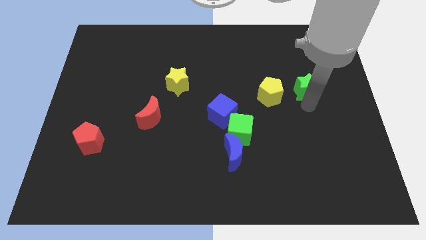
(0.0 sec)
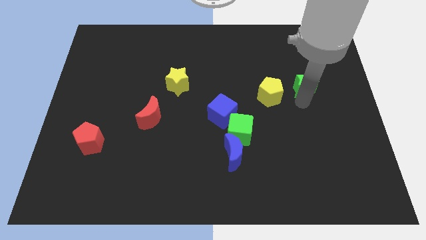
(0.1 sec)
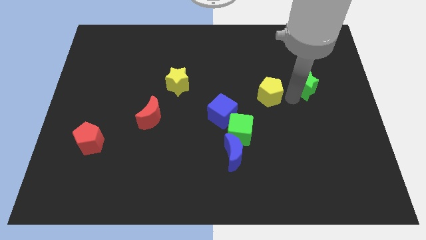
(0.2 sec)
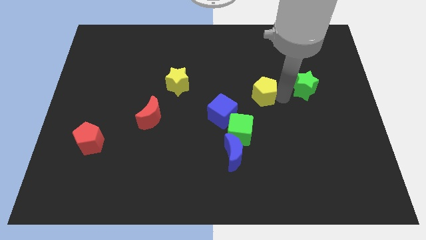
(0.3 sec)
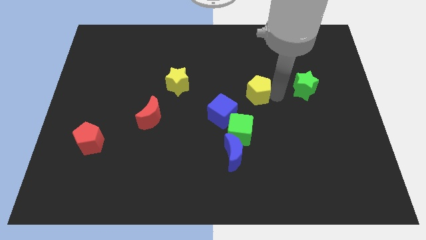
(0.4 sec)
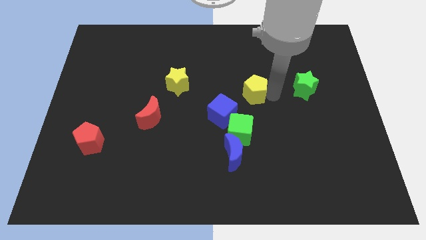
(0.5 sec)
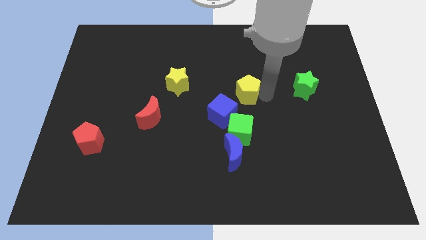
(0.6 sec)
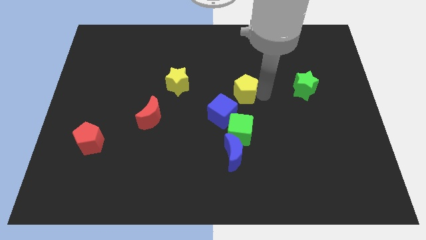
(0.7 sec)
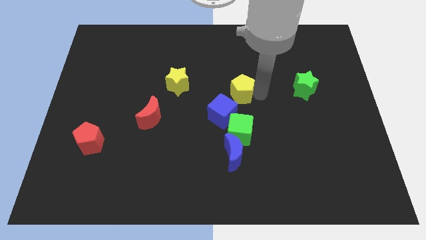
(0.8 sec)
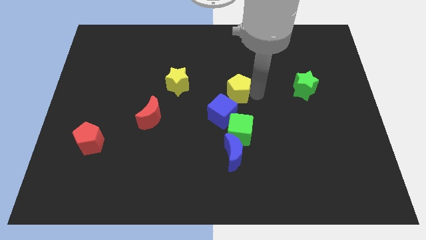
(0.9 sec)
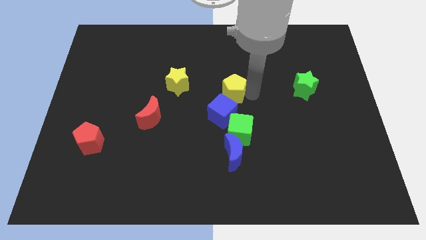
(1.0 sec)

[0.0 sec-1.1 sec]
move the yellow pentagon close to the blue cube

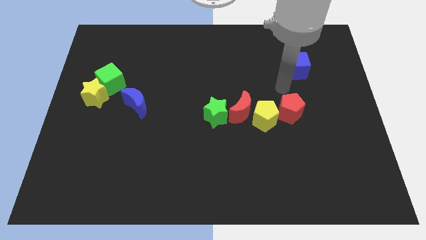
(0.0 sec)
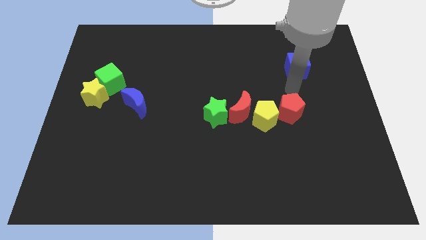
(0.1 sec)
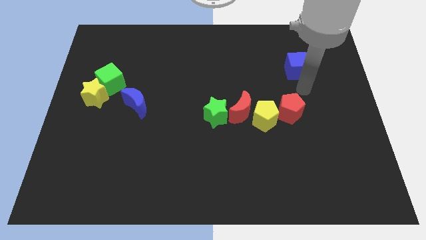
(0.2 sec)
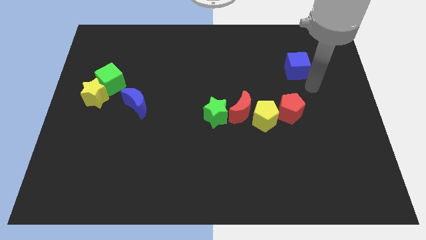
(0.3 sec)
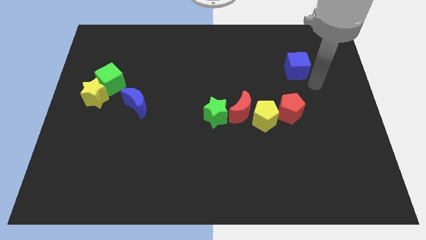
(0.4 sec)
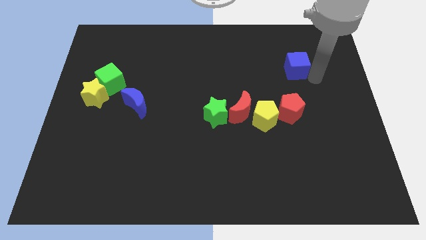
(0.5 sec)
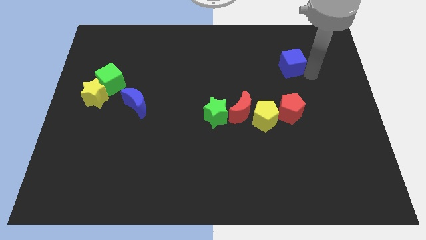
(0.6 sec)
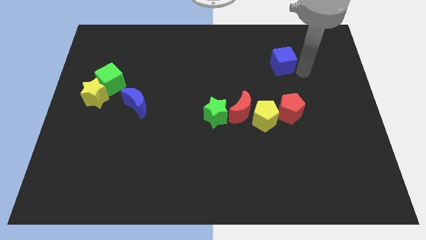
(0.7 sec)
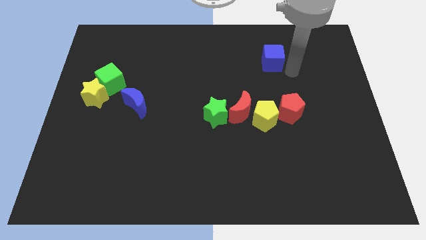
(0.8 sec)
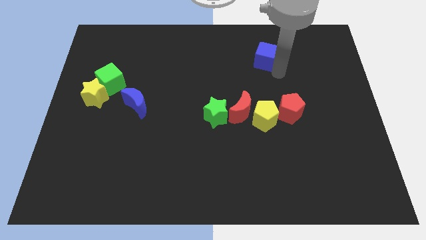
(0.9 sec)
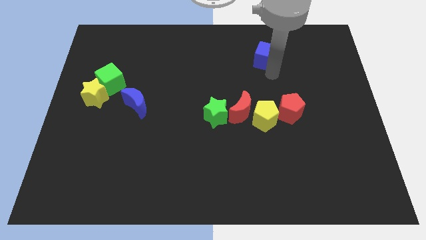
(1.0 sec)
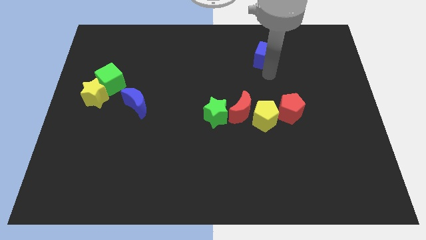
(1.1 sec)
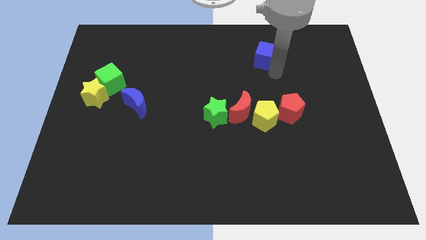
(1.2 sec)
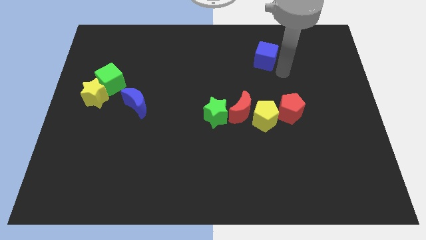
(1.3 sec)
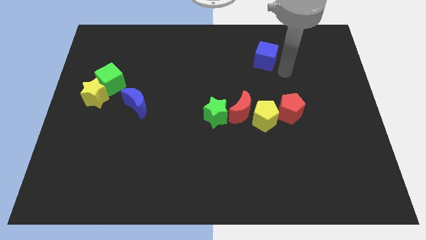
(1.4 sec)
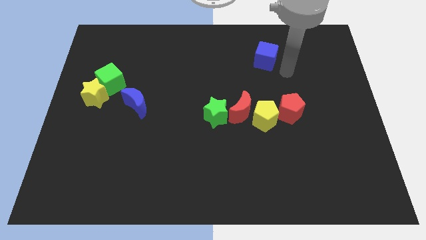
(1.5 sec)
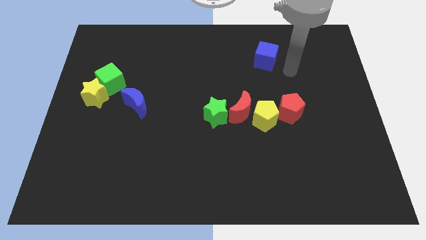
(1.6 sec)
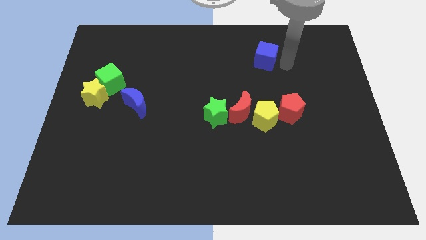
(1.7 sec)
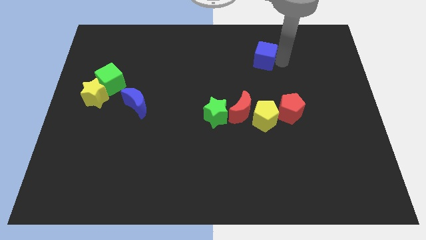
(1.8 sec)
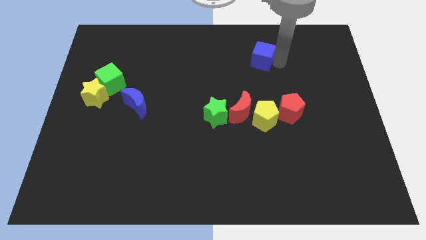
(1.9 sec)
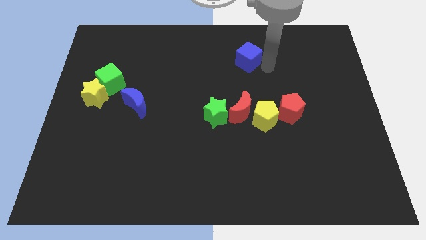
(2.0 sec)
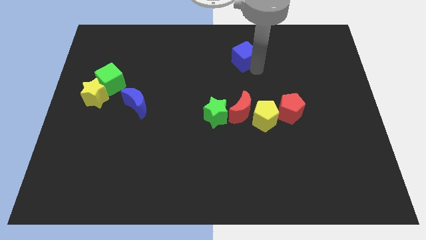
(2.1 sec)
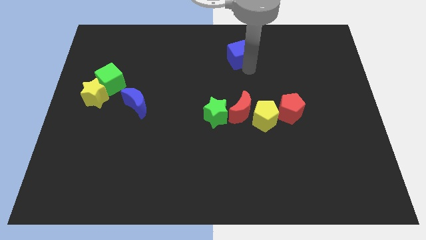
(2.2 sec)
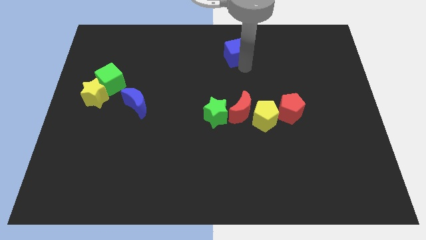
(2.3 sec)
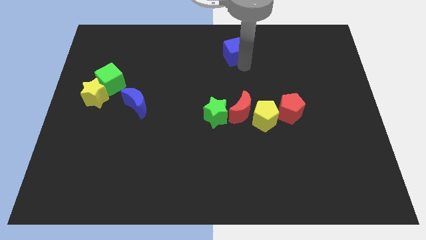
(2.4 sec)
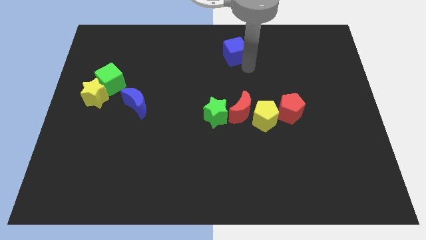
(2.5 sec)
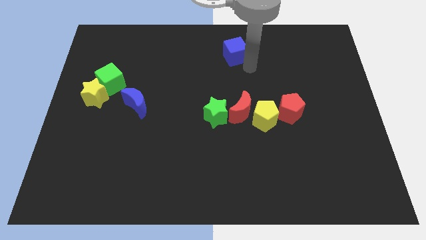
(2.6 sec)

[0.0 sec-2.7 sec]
place the green cube above the red moon

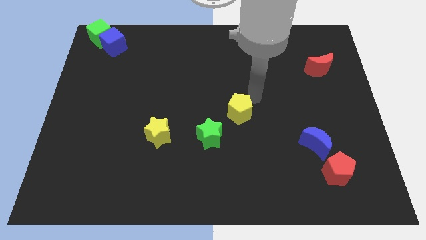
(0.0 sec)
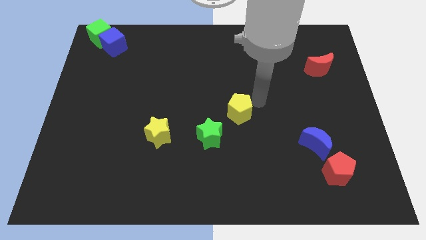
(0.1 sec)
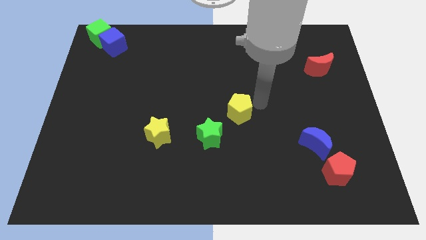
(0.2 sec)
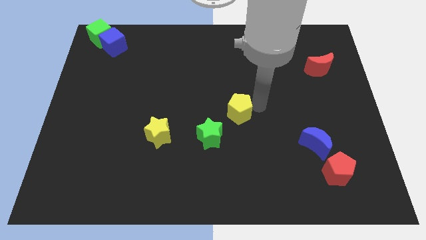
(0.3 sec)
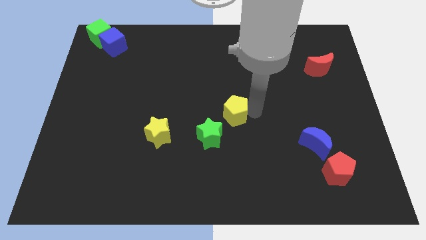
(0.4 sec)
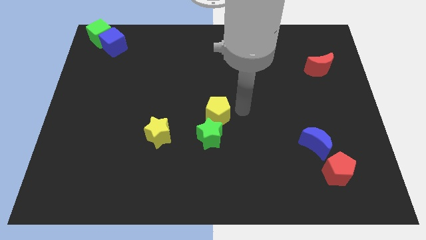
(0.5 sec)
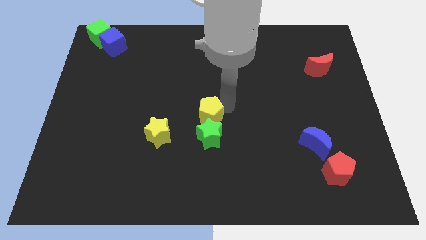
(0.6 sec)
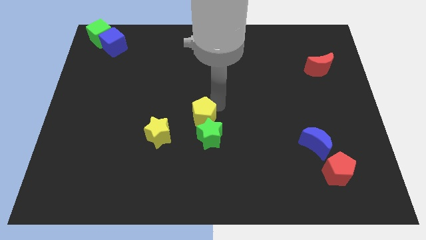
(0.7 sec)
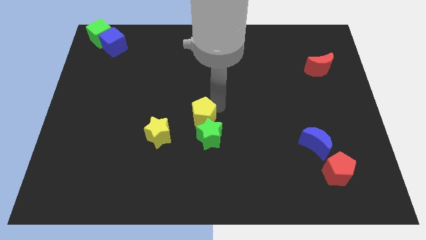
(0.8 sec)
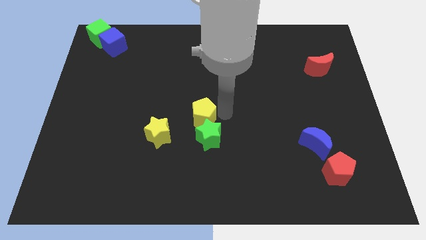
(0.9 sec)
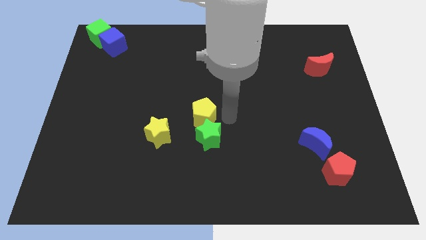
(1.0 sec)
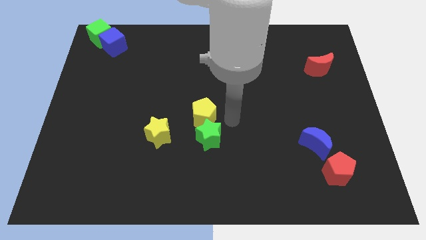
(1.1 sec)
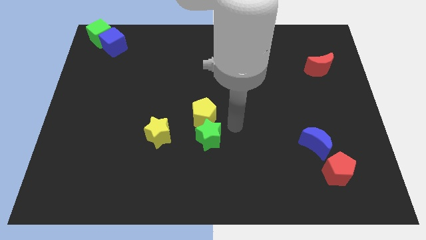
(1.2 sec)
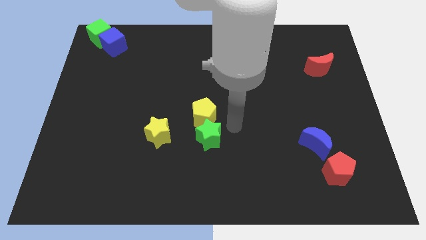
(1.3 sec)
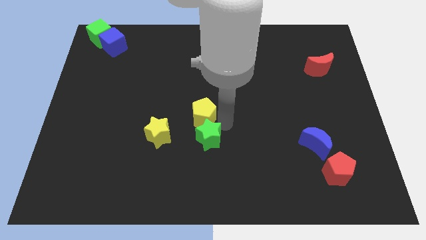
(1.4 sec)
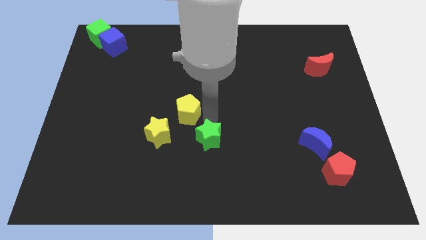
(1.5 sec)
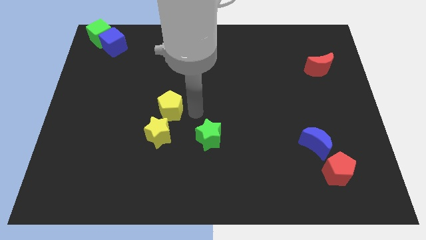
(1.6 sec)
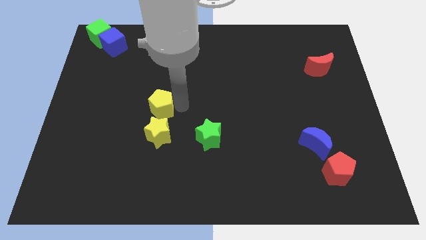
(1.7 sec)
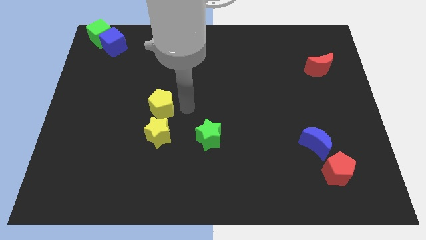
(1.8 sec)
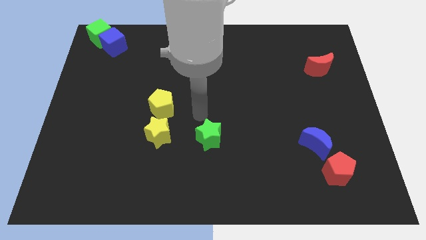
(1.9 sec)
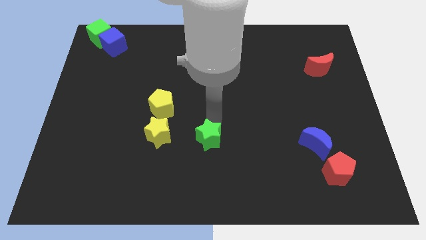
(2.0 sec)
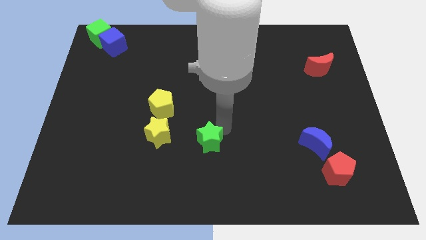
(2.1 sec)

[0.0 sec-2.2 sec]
place the yellow pentagon on top right of the yellow star

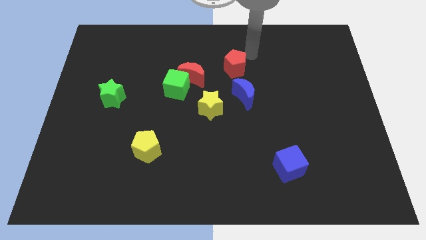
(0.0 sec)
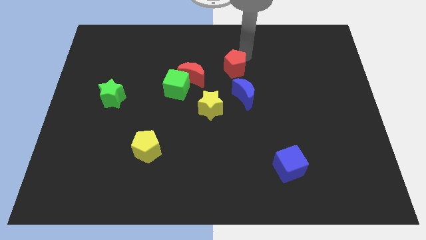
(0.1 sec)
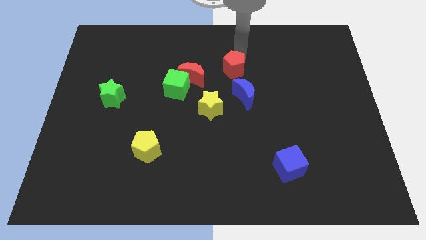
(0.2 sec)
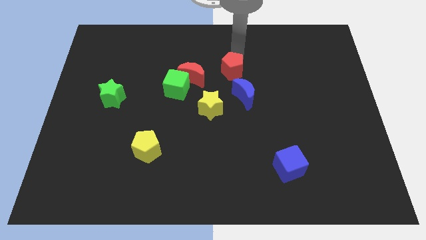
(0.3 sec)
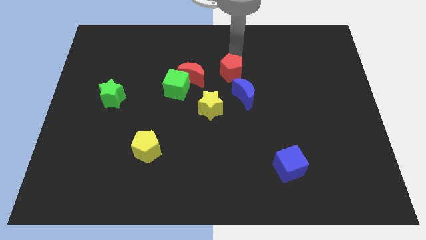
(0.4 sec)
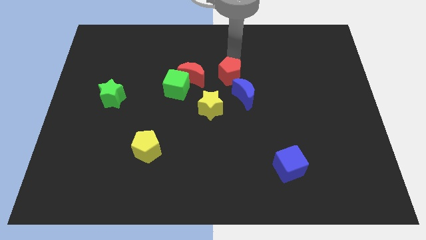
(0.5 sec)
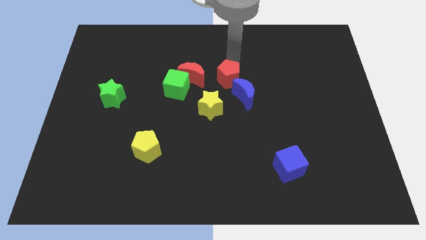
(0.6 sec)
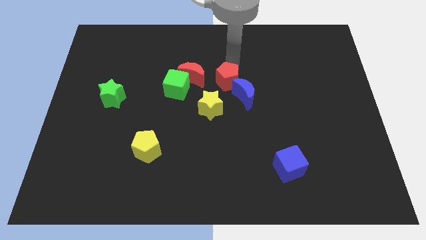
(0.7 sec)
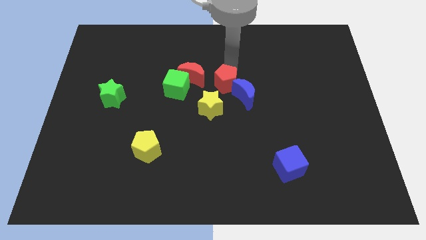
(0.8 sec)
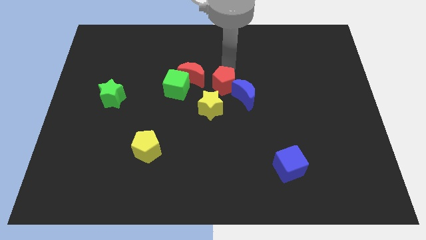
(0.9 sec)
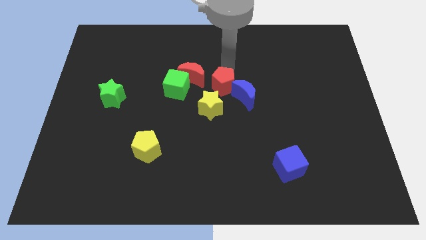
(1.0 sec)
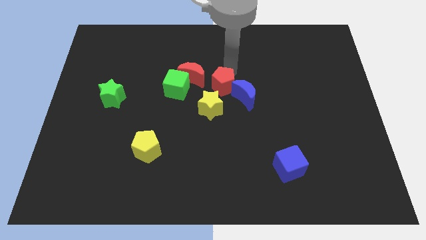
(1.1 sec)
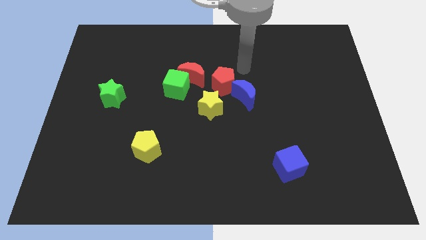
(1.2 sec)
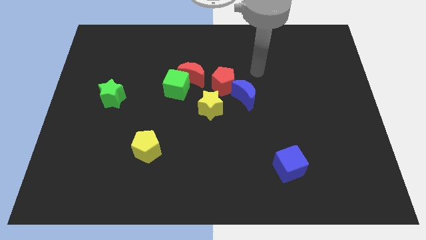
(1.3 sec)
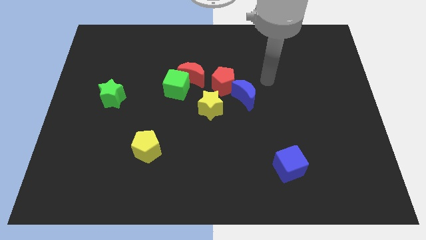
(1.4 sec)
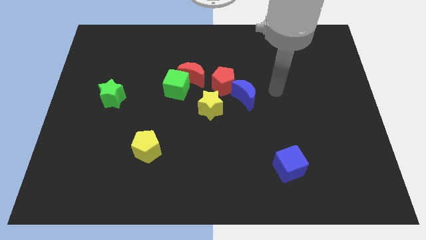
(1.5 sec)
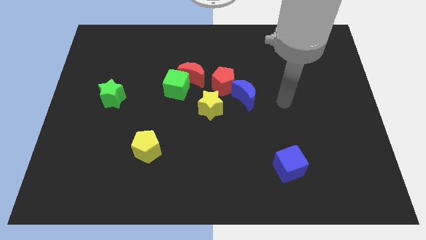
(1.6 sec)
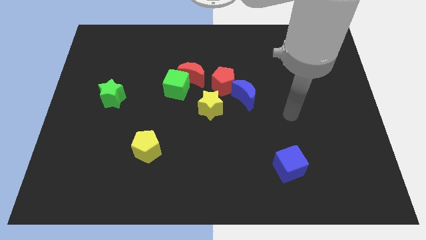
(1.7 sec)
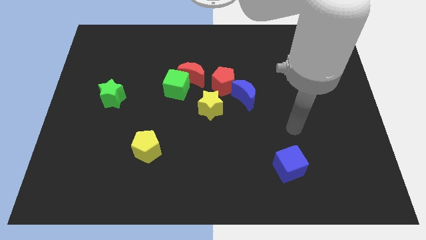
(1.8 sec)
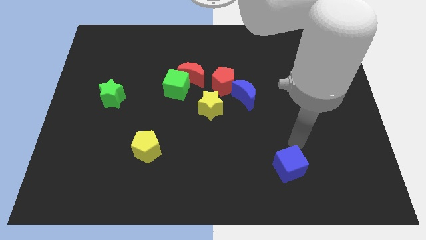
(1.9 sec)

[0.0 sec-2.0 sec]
push the red pentagon close to the blue moon

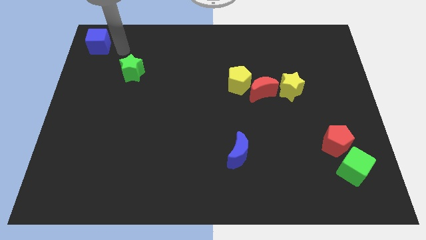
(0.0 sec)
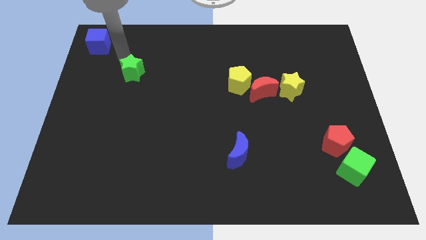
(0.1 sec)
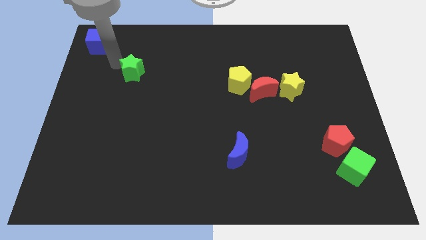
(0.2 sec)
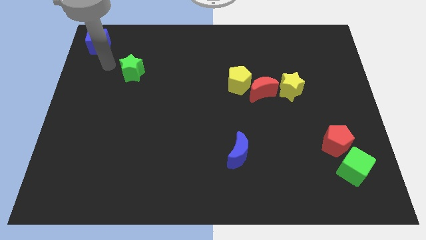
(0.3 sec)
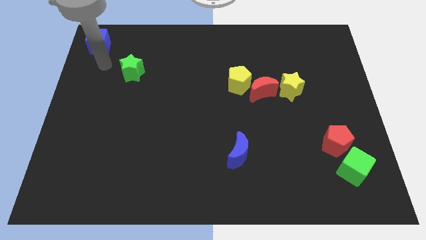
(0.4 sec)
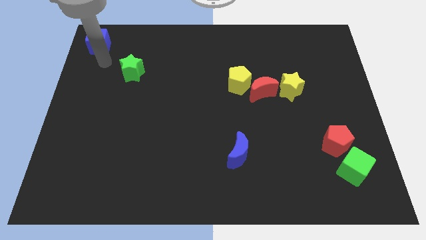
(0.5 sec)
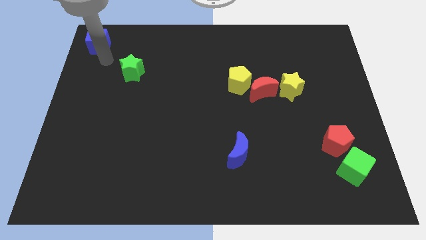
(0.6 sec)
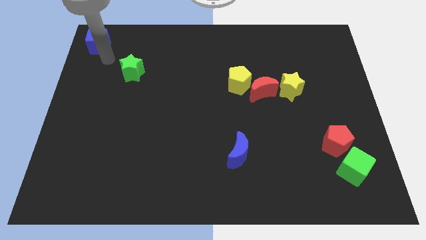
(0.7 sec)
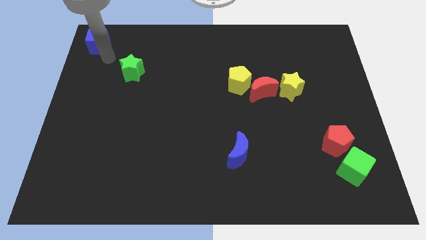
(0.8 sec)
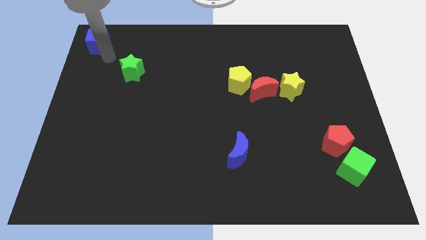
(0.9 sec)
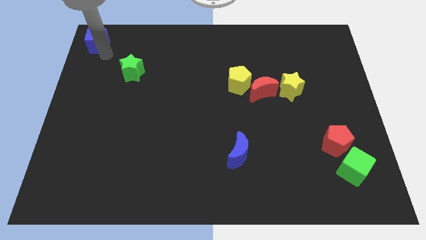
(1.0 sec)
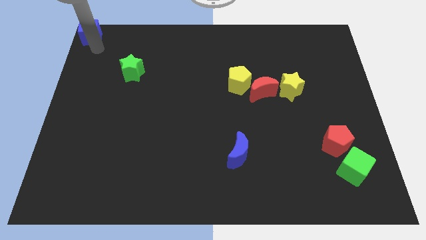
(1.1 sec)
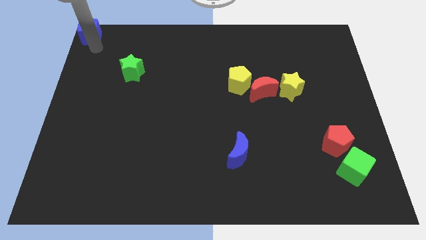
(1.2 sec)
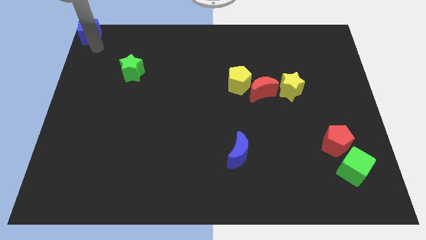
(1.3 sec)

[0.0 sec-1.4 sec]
push the blue cube to the top left corner of the board
